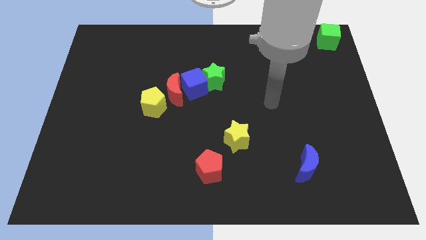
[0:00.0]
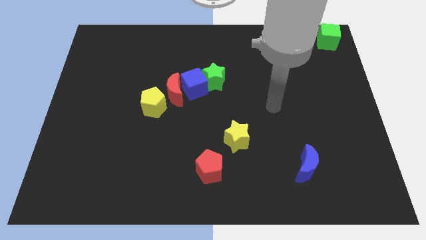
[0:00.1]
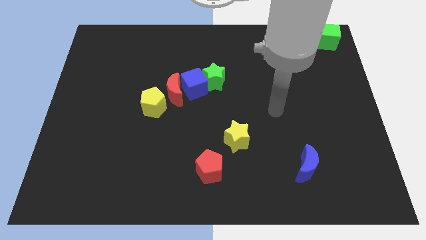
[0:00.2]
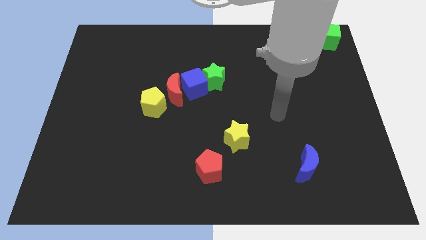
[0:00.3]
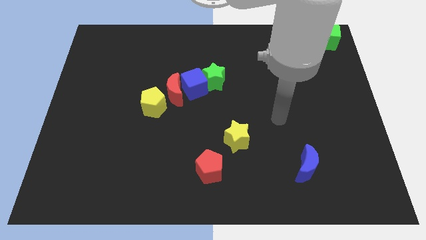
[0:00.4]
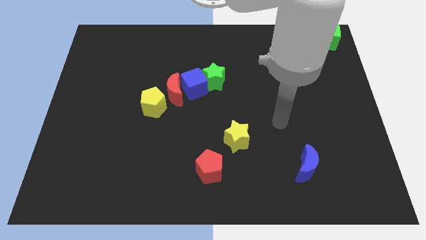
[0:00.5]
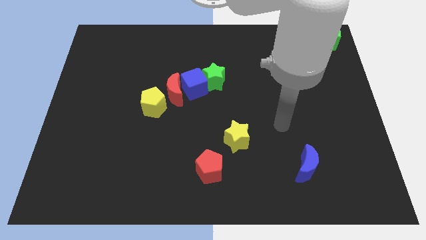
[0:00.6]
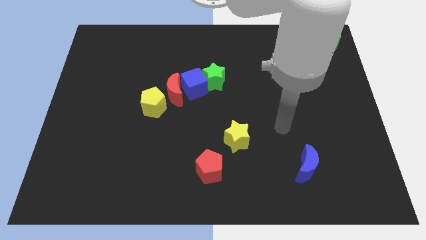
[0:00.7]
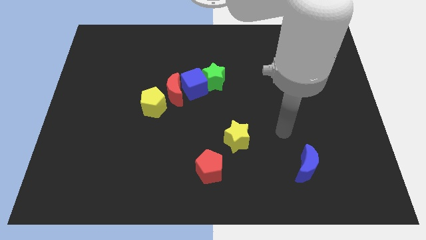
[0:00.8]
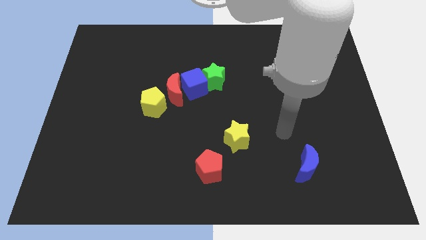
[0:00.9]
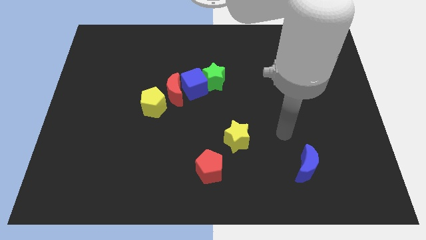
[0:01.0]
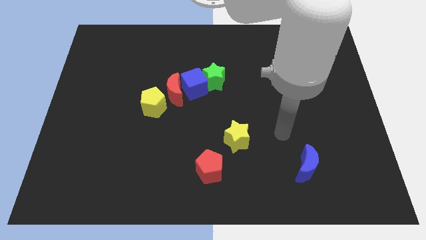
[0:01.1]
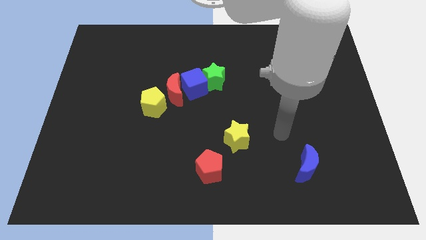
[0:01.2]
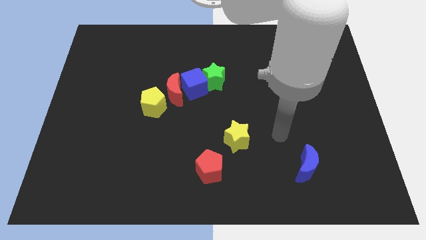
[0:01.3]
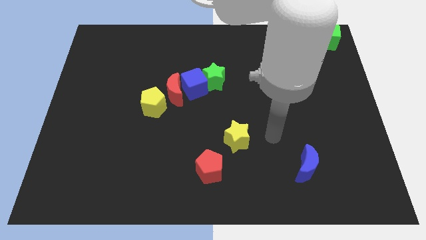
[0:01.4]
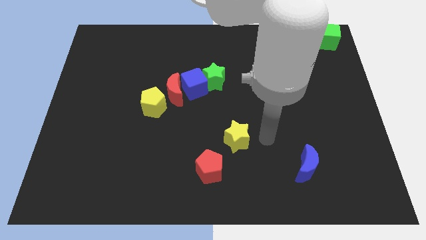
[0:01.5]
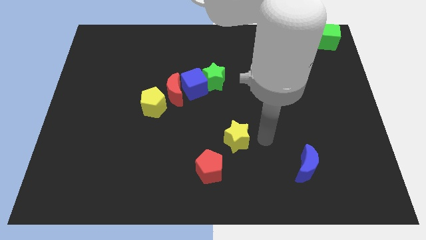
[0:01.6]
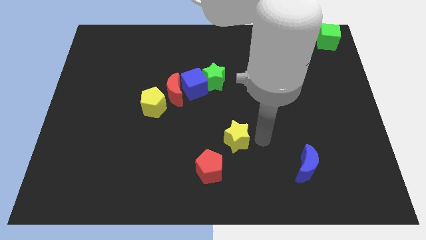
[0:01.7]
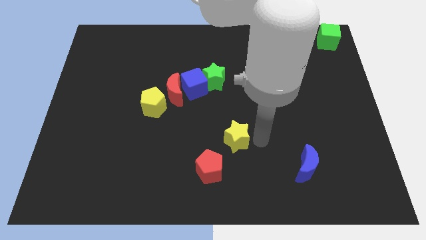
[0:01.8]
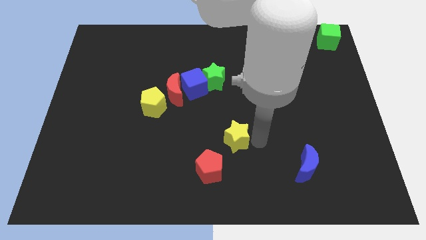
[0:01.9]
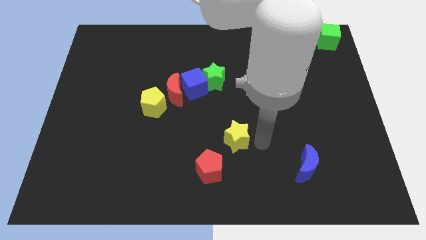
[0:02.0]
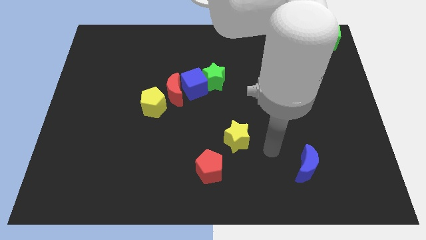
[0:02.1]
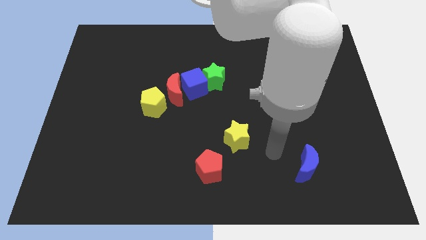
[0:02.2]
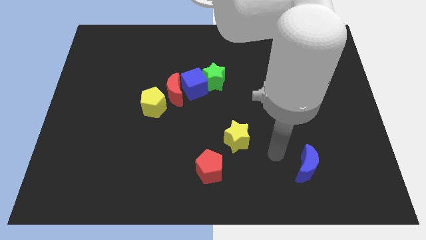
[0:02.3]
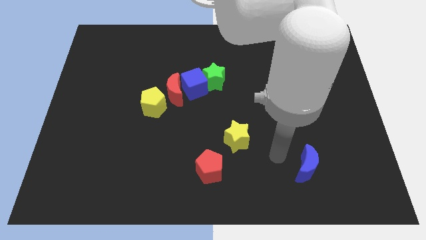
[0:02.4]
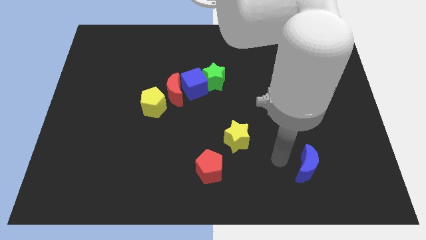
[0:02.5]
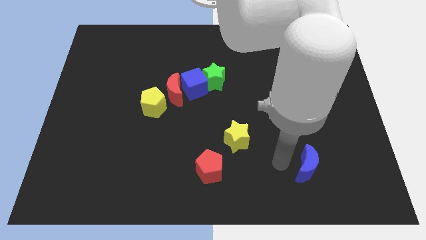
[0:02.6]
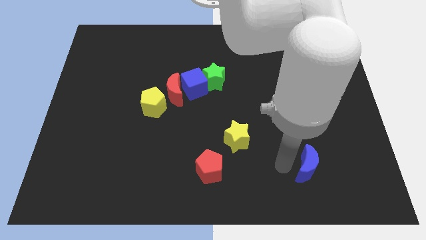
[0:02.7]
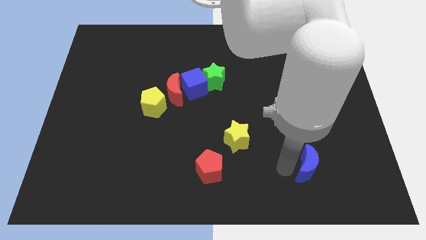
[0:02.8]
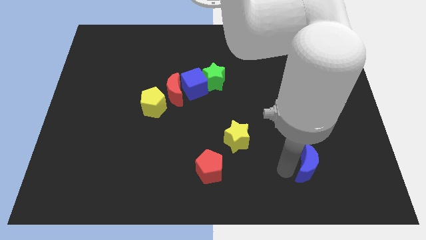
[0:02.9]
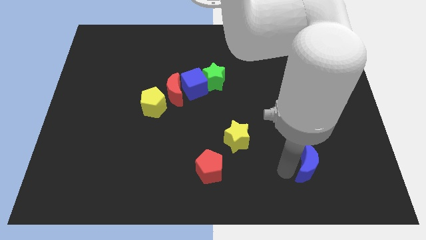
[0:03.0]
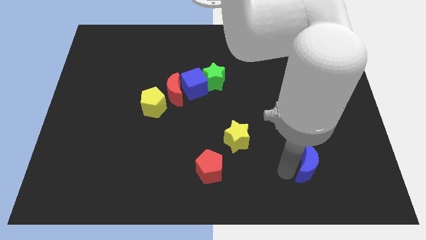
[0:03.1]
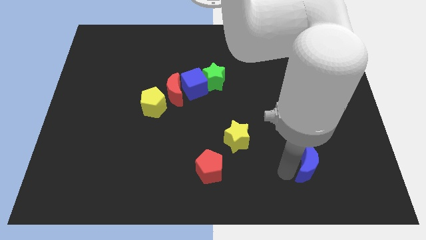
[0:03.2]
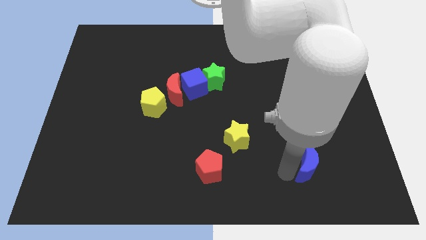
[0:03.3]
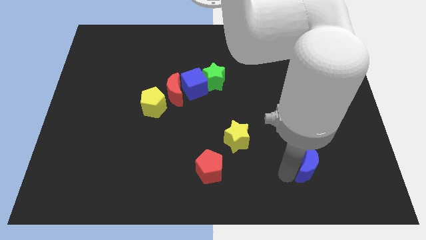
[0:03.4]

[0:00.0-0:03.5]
move your arm and point to the left of the blue moon

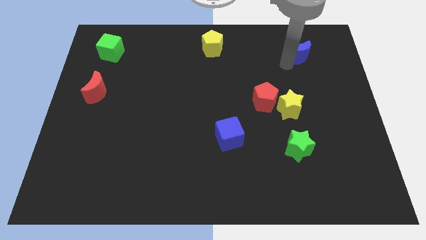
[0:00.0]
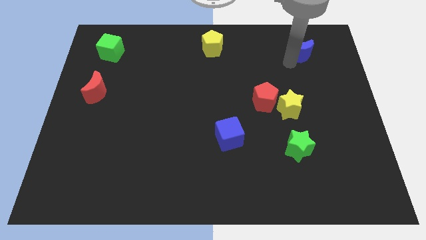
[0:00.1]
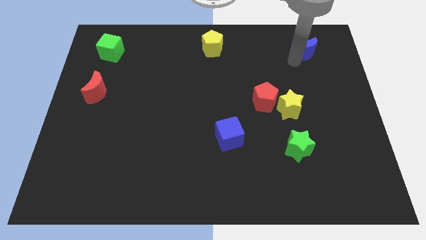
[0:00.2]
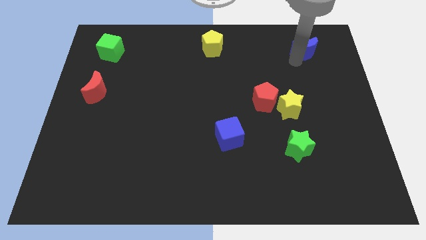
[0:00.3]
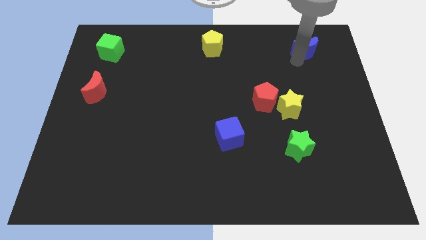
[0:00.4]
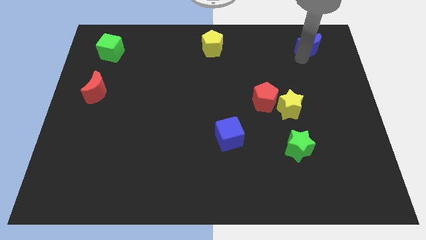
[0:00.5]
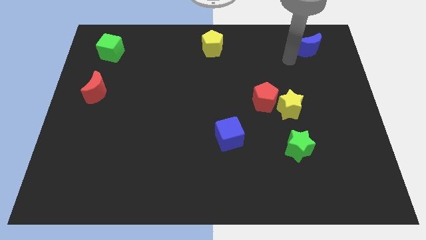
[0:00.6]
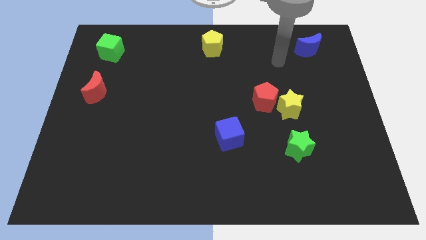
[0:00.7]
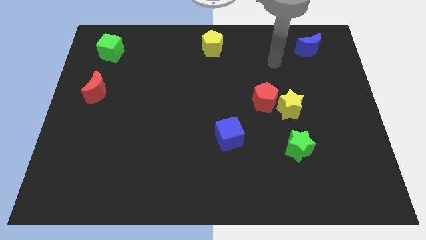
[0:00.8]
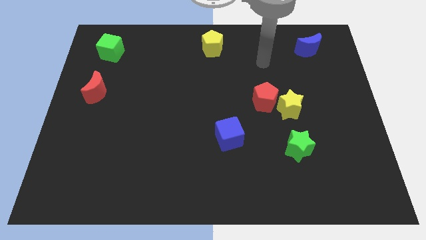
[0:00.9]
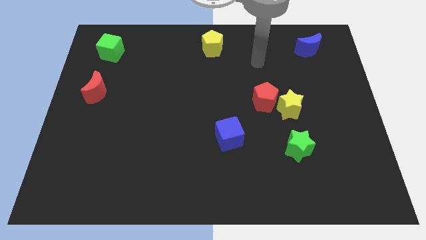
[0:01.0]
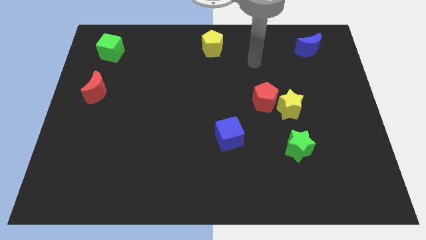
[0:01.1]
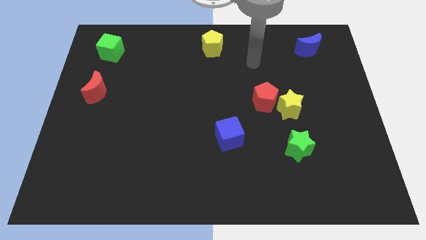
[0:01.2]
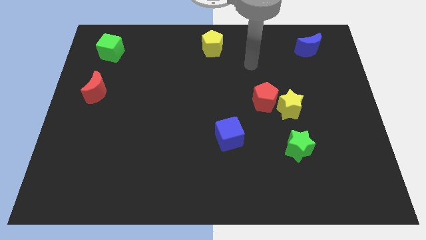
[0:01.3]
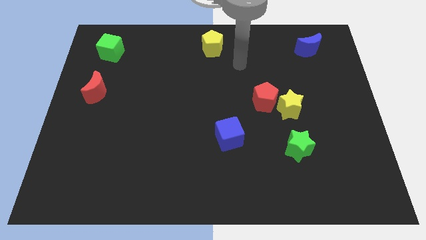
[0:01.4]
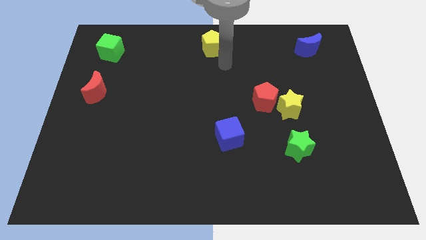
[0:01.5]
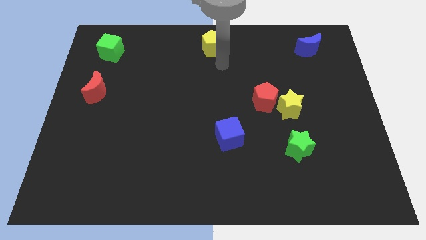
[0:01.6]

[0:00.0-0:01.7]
place your arm below the yellow pentagon

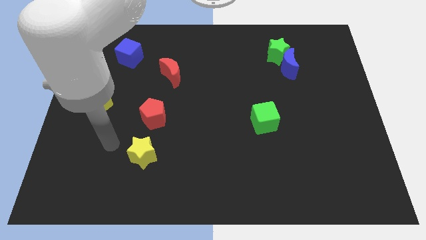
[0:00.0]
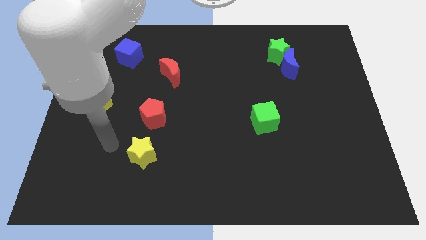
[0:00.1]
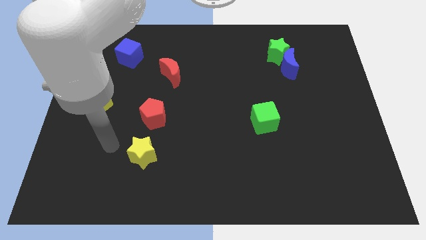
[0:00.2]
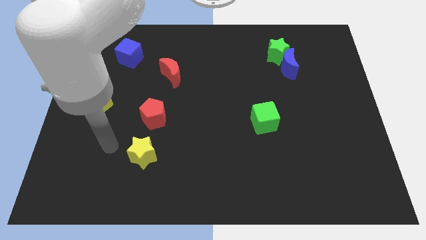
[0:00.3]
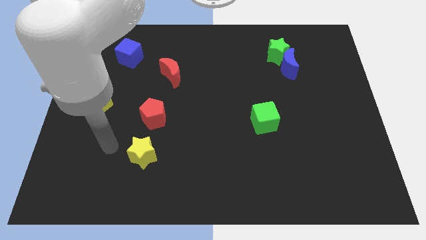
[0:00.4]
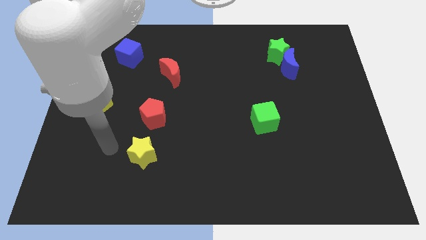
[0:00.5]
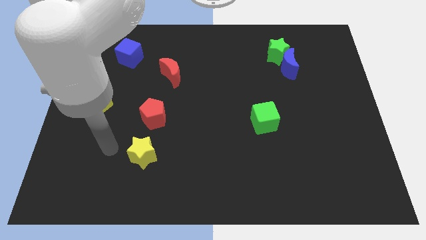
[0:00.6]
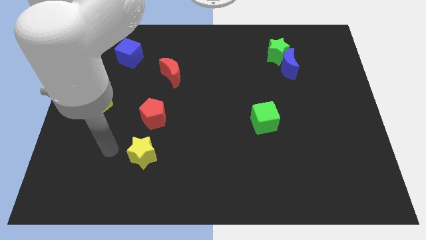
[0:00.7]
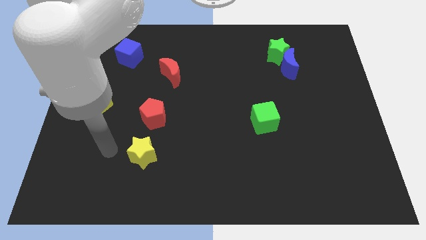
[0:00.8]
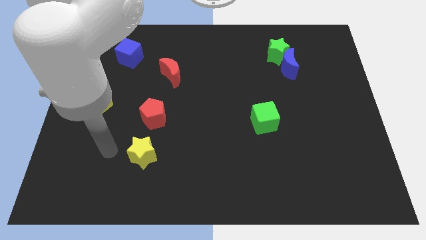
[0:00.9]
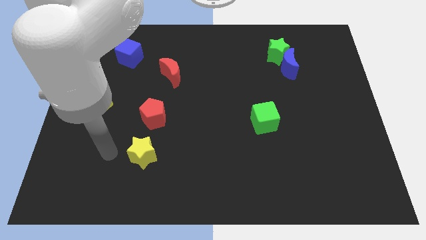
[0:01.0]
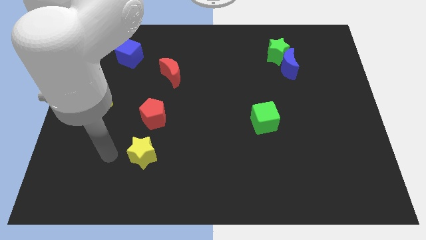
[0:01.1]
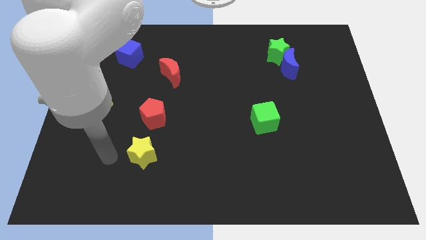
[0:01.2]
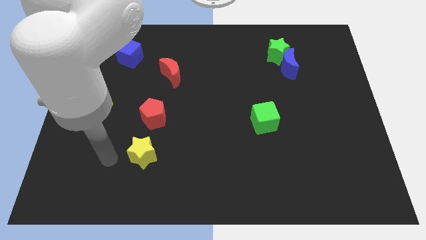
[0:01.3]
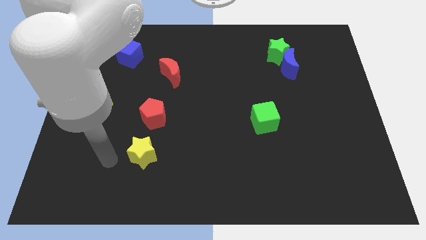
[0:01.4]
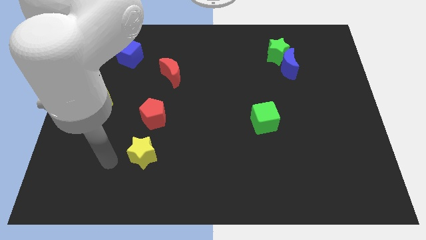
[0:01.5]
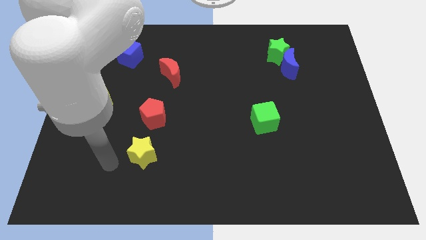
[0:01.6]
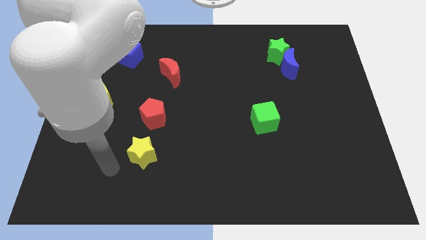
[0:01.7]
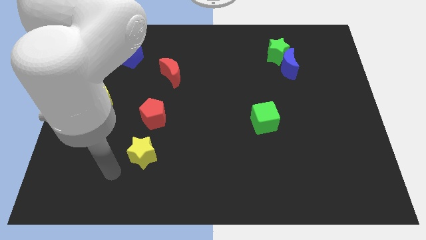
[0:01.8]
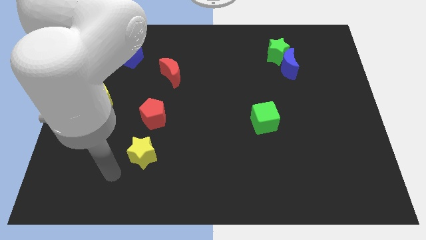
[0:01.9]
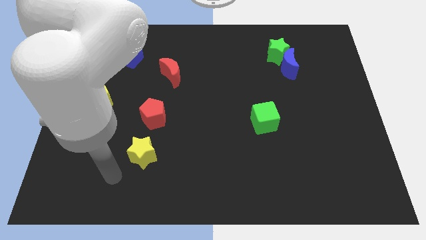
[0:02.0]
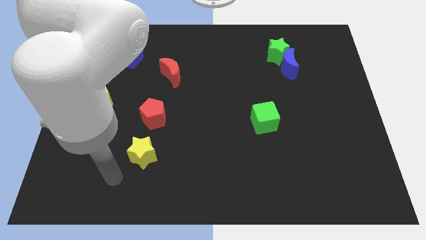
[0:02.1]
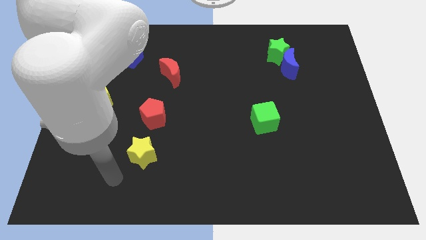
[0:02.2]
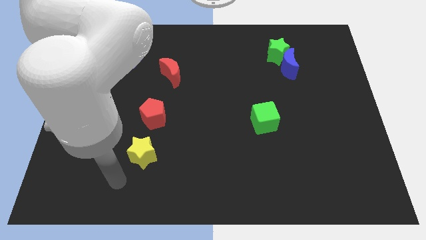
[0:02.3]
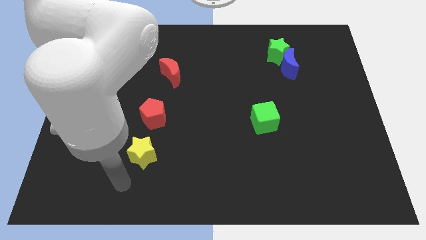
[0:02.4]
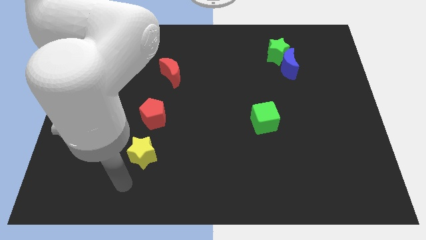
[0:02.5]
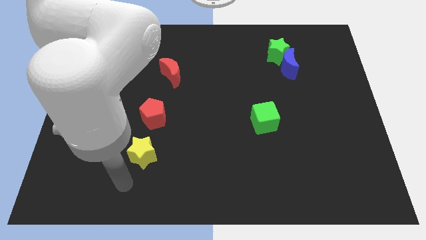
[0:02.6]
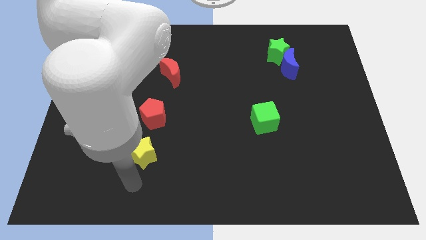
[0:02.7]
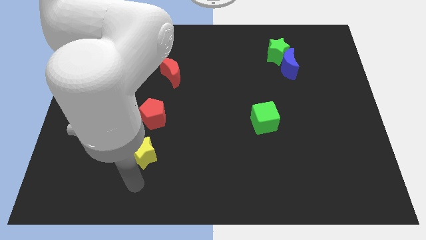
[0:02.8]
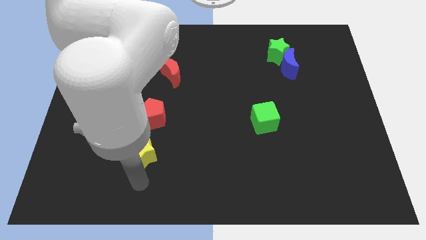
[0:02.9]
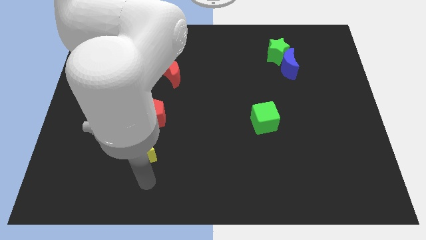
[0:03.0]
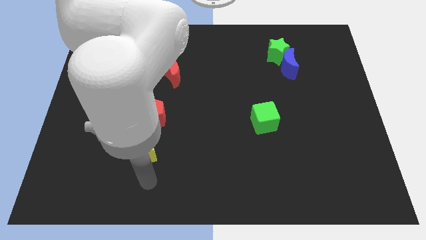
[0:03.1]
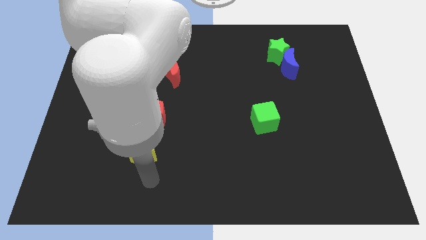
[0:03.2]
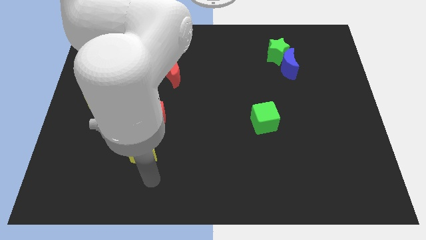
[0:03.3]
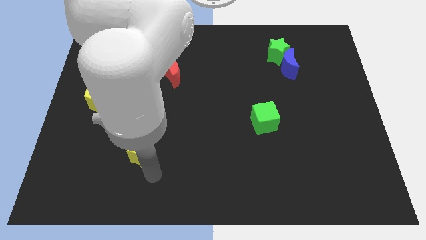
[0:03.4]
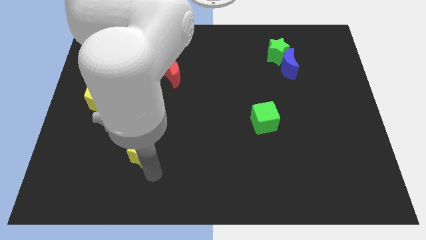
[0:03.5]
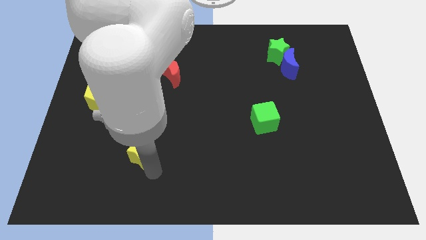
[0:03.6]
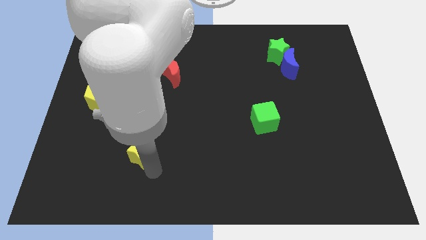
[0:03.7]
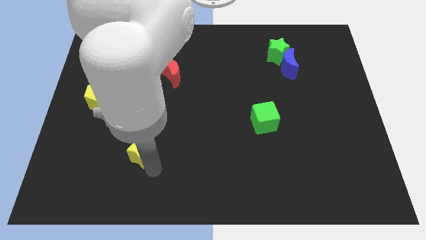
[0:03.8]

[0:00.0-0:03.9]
touch the bottom right side of the yellow pentagon
